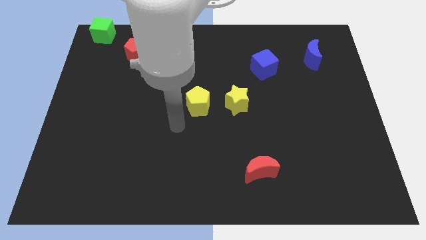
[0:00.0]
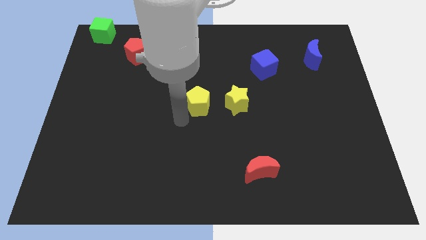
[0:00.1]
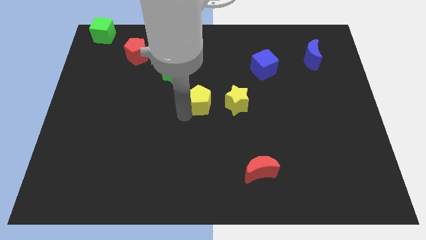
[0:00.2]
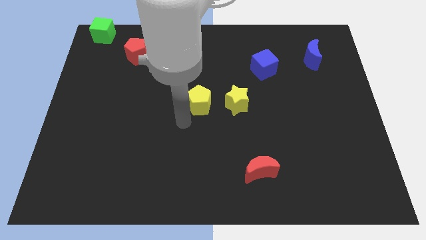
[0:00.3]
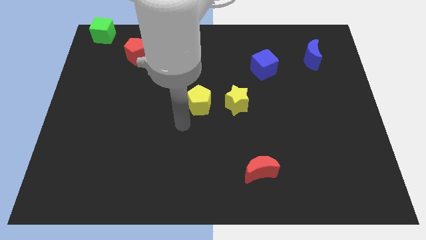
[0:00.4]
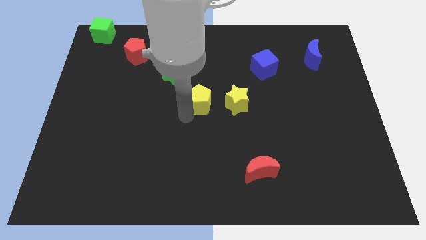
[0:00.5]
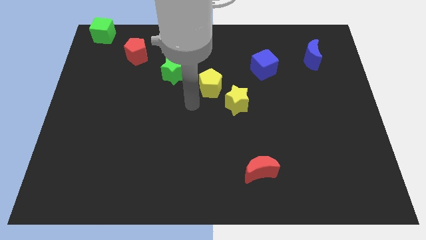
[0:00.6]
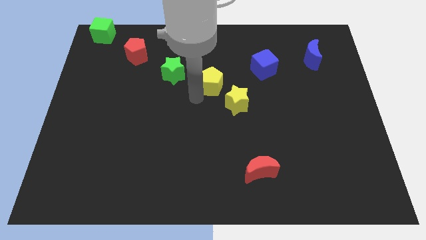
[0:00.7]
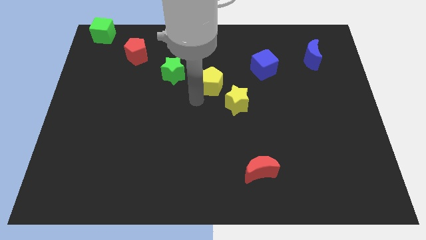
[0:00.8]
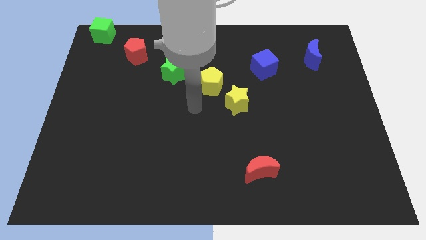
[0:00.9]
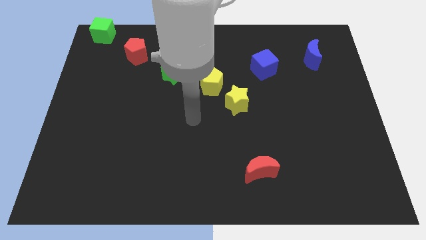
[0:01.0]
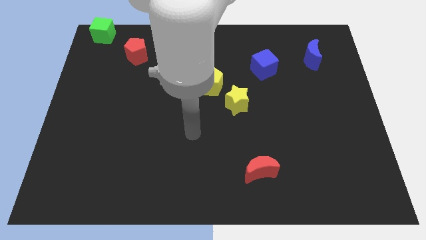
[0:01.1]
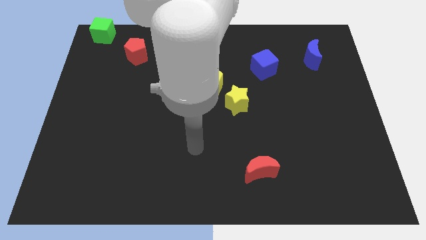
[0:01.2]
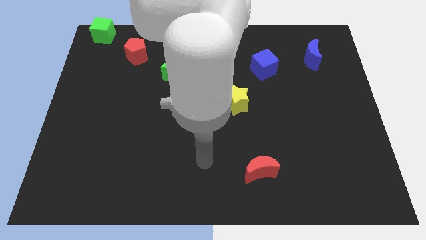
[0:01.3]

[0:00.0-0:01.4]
push the yellow pentagon in between the yellow star and green star

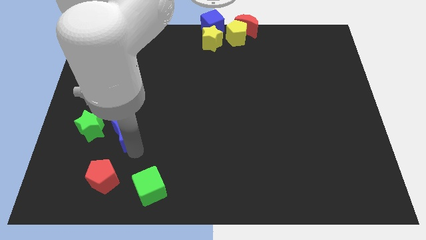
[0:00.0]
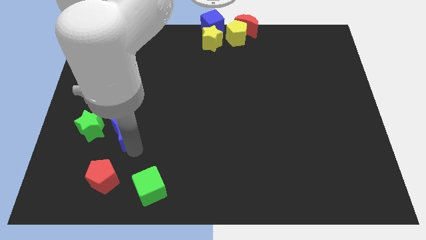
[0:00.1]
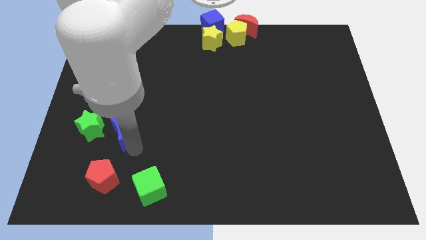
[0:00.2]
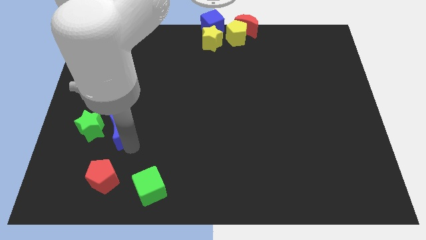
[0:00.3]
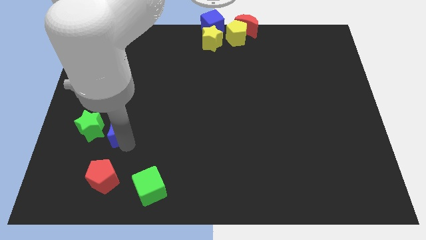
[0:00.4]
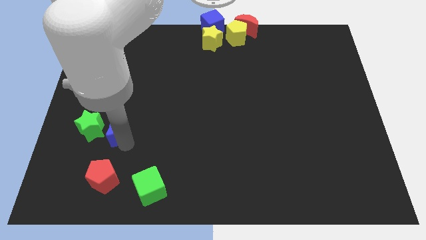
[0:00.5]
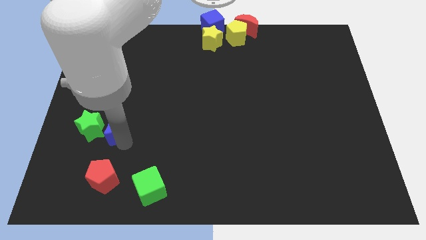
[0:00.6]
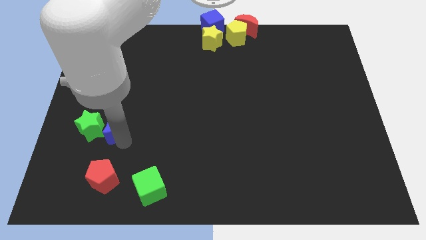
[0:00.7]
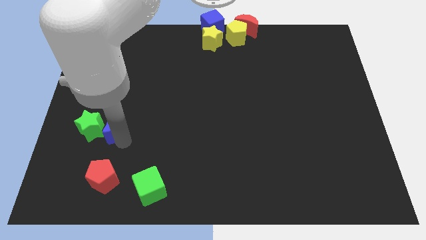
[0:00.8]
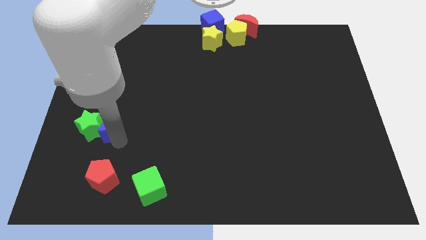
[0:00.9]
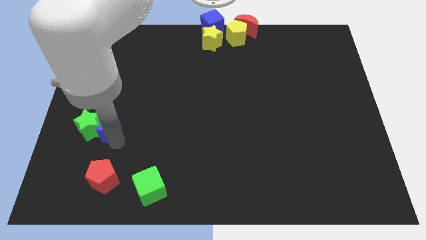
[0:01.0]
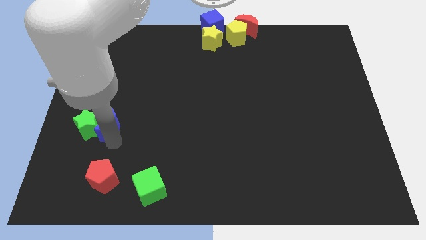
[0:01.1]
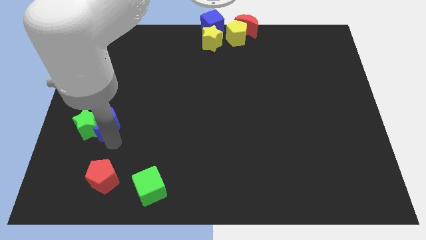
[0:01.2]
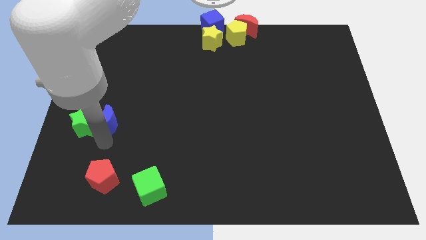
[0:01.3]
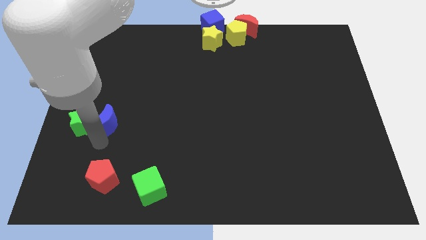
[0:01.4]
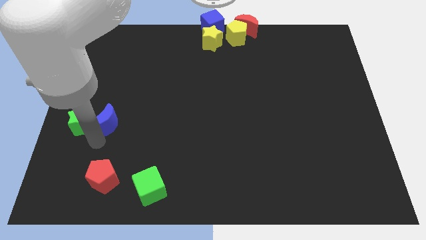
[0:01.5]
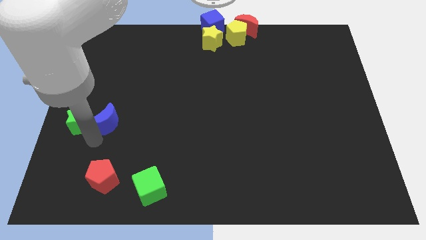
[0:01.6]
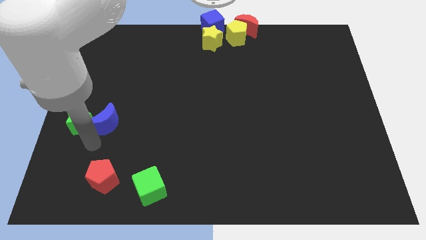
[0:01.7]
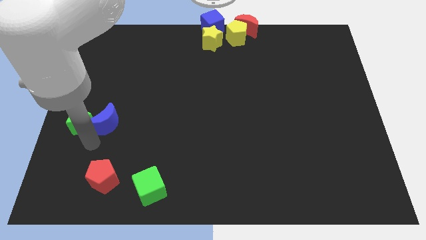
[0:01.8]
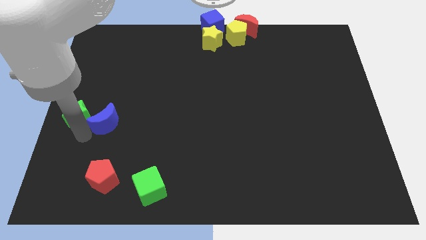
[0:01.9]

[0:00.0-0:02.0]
push the blue crescent into green star

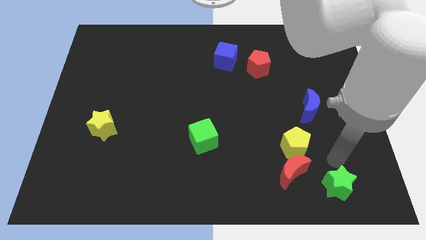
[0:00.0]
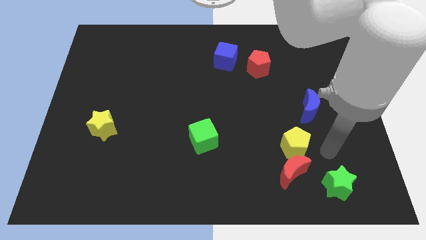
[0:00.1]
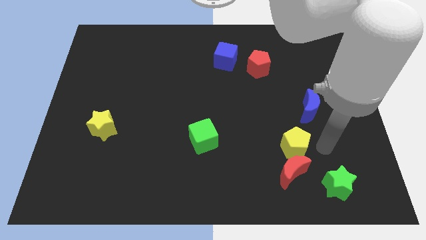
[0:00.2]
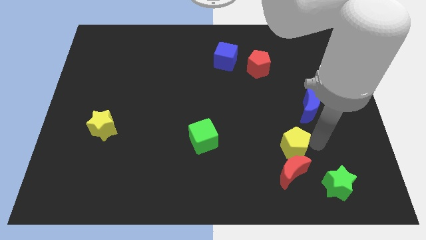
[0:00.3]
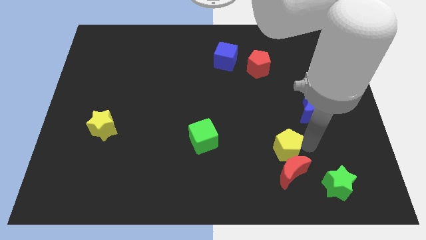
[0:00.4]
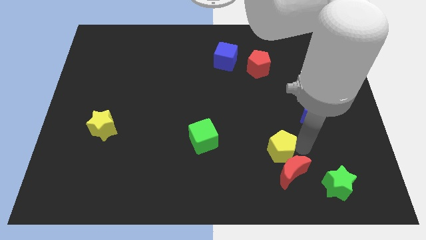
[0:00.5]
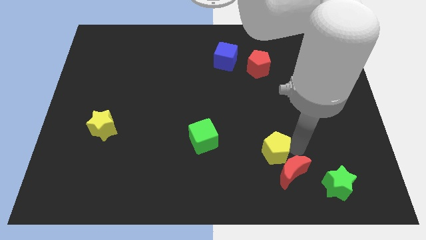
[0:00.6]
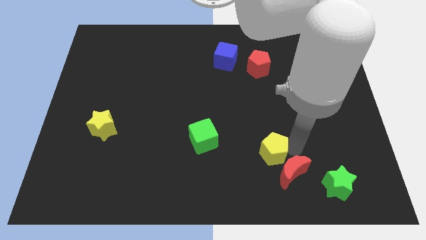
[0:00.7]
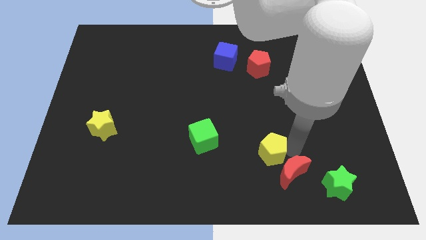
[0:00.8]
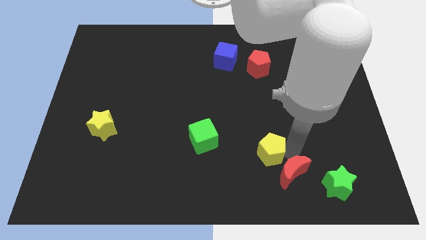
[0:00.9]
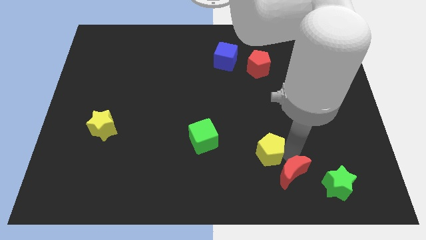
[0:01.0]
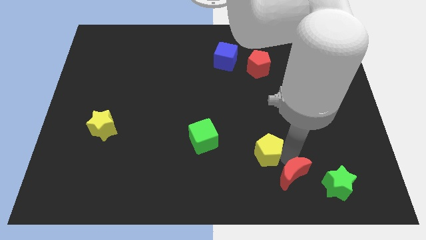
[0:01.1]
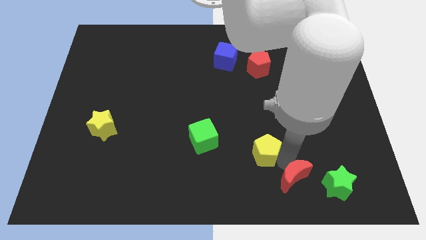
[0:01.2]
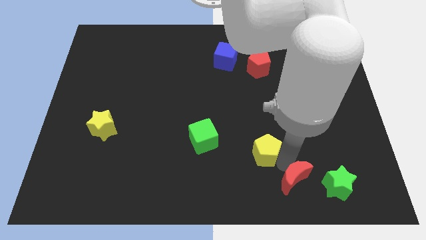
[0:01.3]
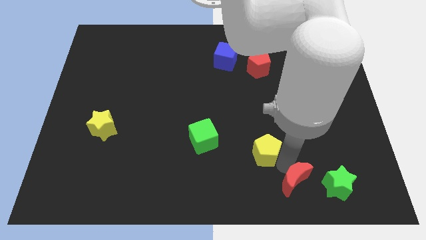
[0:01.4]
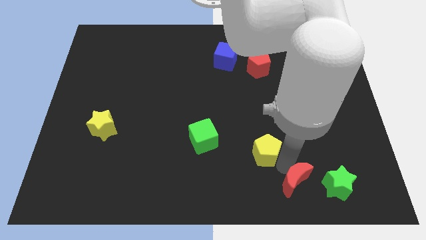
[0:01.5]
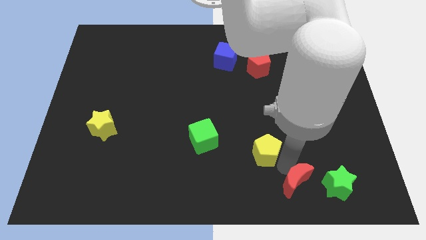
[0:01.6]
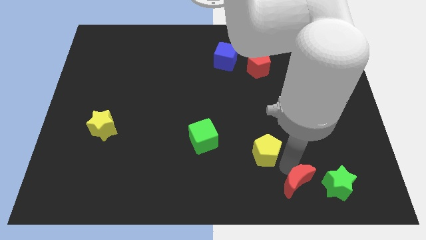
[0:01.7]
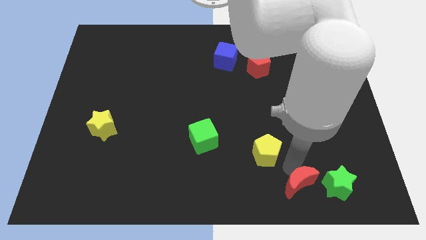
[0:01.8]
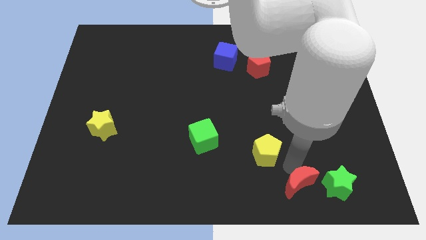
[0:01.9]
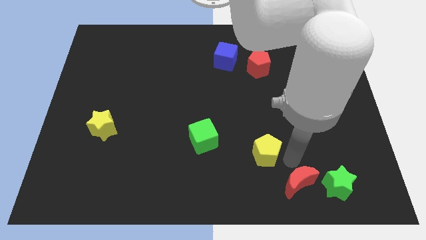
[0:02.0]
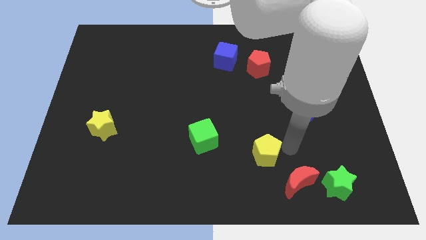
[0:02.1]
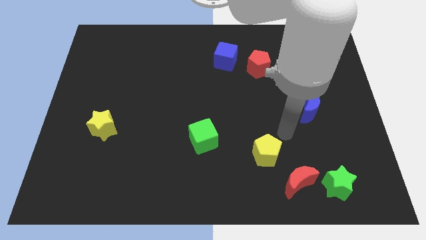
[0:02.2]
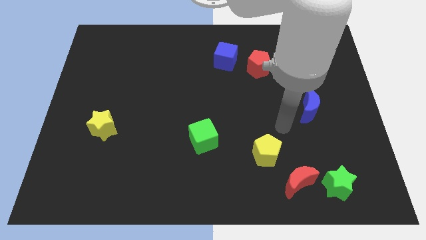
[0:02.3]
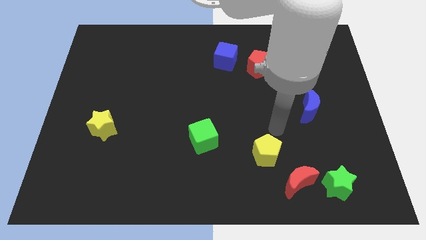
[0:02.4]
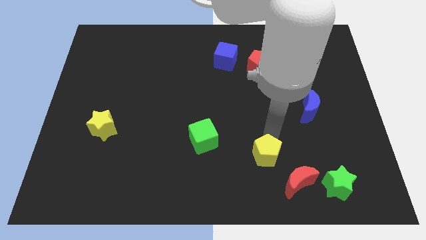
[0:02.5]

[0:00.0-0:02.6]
move yellow pentagon towards the center

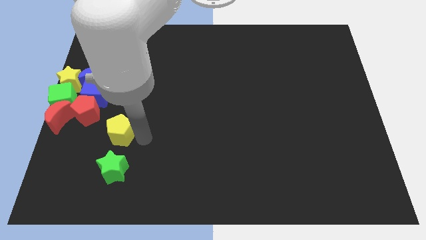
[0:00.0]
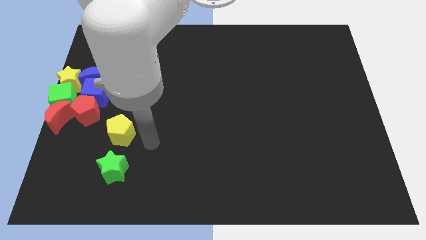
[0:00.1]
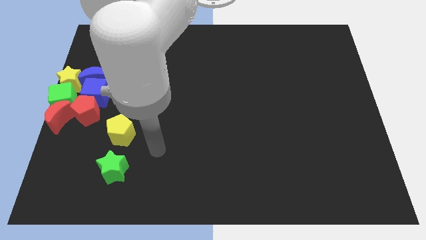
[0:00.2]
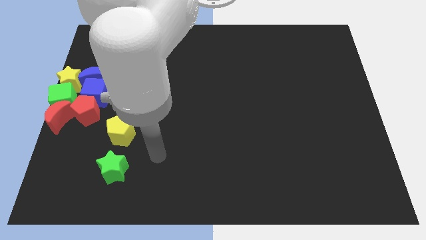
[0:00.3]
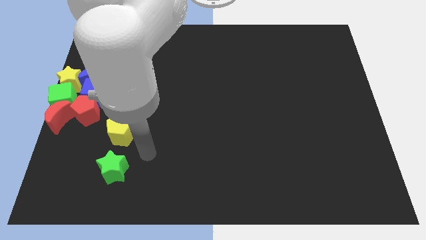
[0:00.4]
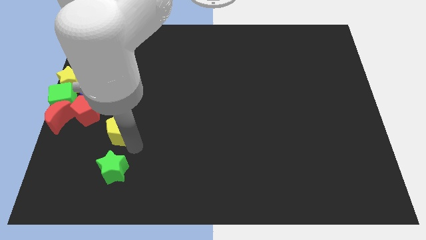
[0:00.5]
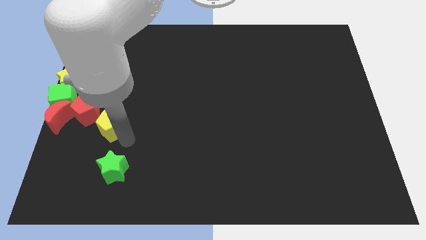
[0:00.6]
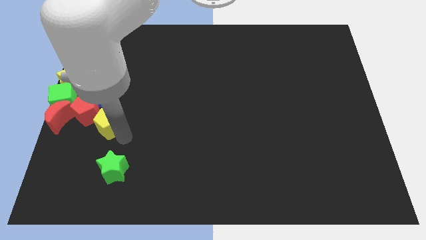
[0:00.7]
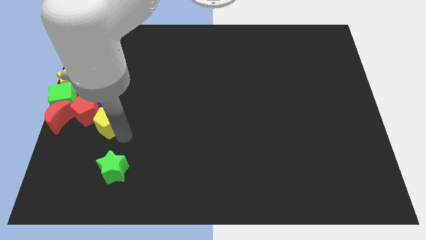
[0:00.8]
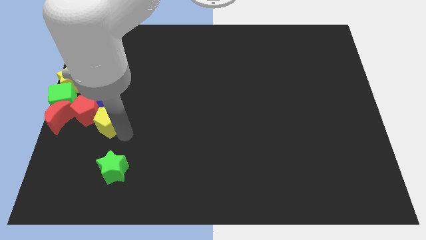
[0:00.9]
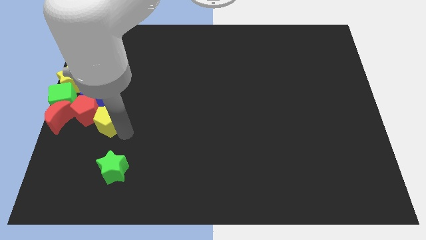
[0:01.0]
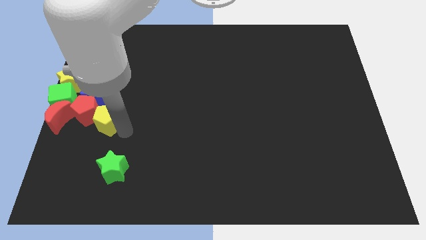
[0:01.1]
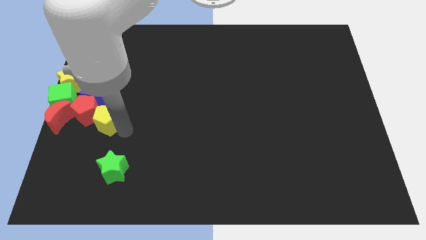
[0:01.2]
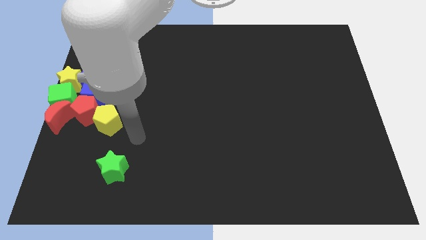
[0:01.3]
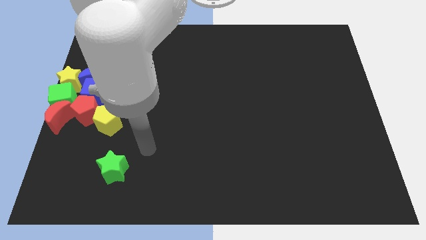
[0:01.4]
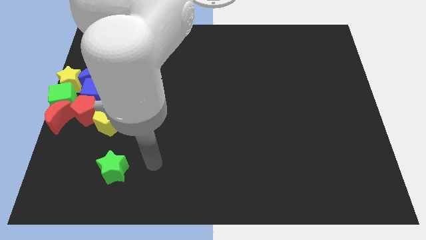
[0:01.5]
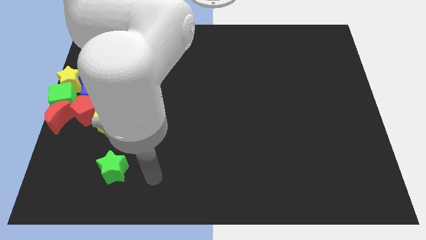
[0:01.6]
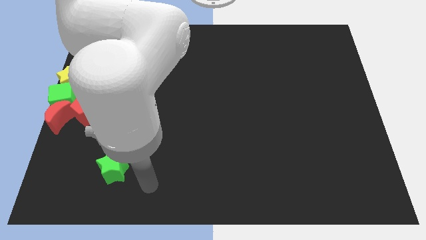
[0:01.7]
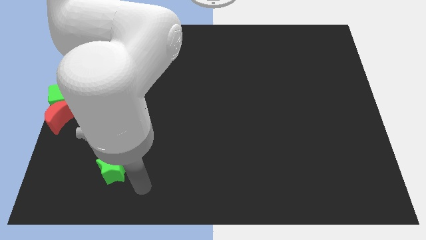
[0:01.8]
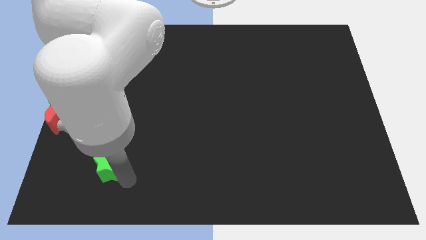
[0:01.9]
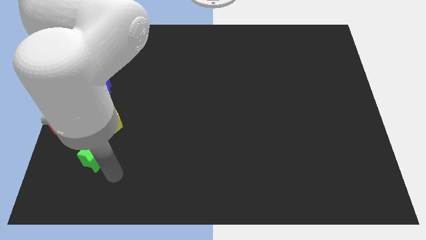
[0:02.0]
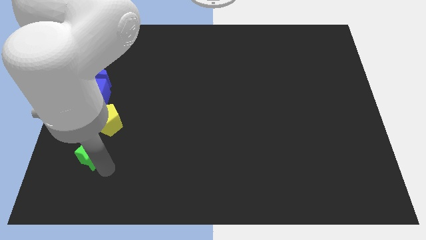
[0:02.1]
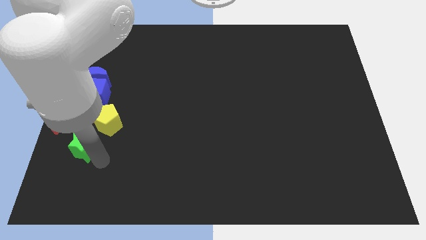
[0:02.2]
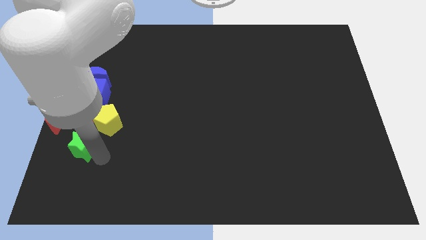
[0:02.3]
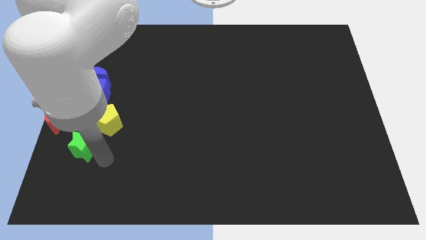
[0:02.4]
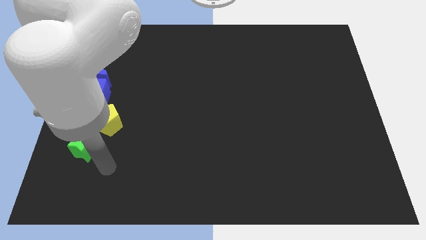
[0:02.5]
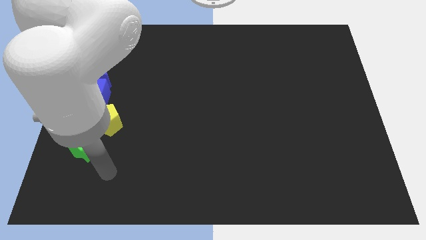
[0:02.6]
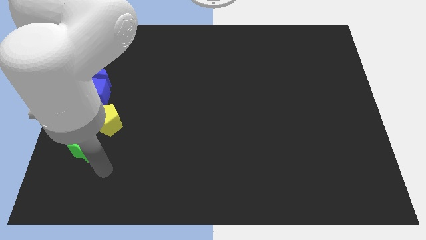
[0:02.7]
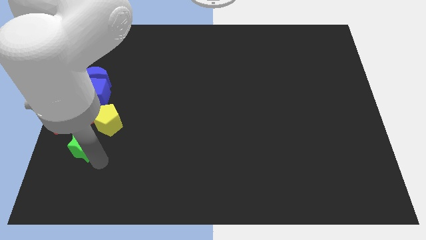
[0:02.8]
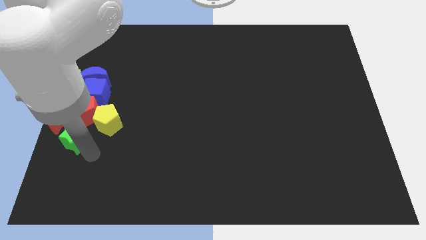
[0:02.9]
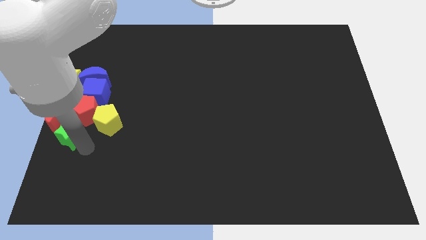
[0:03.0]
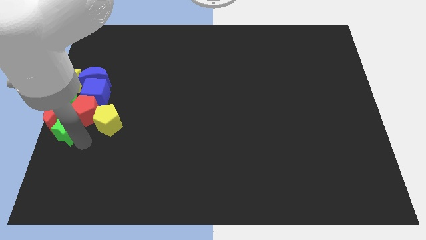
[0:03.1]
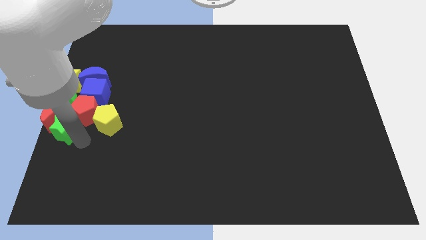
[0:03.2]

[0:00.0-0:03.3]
slide the green star into the group of blocks
